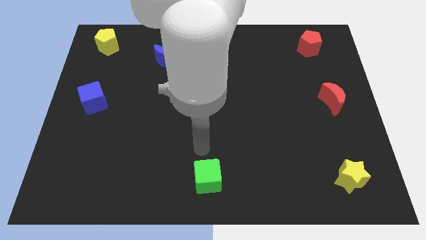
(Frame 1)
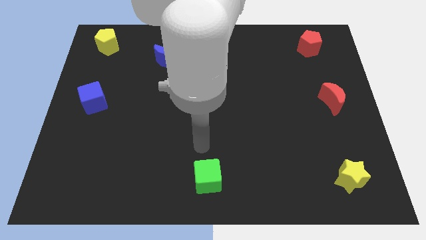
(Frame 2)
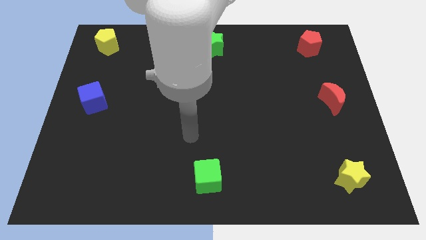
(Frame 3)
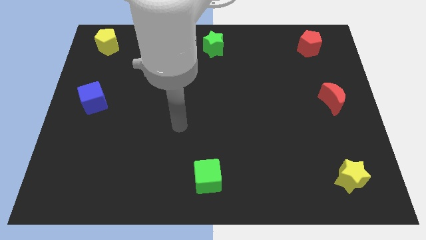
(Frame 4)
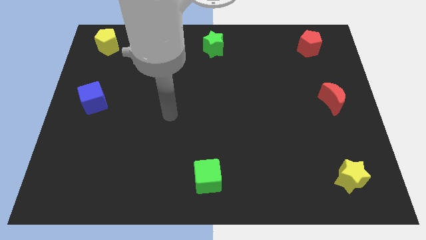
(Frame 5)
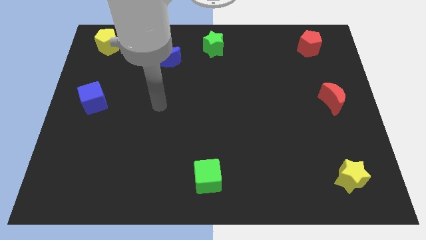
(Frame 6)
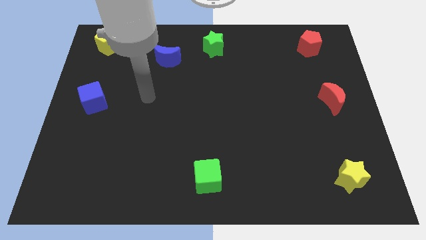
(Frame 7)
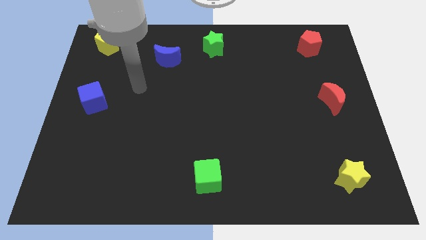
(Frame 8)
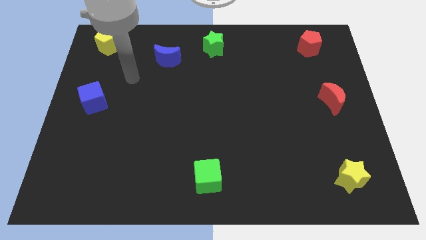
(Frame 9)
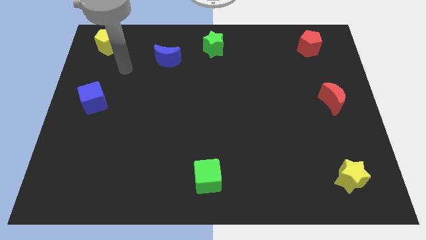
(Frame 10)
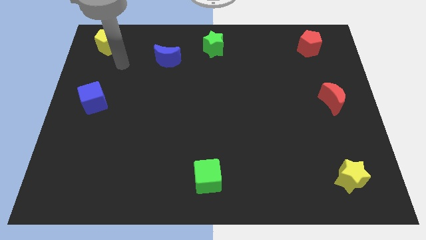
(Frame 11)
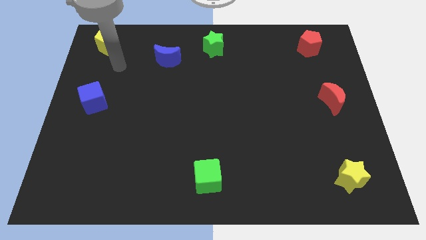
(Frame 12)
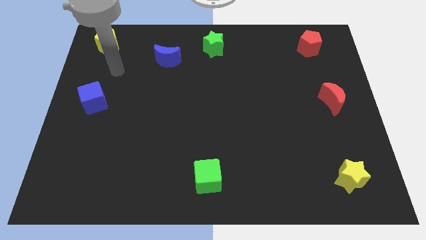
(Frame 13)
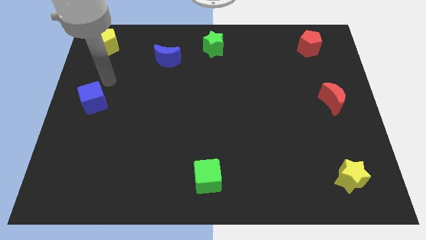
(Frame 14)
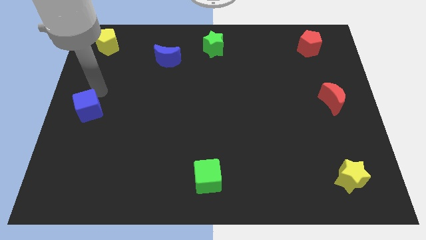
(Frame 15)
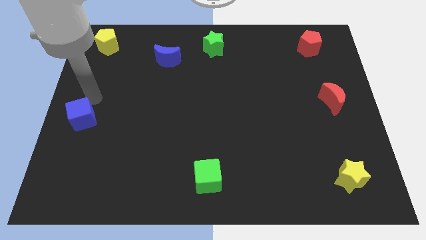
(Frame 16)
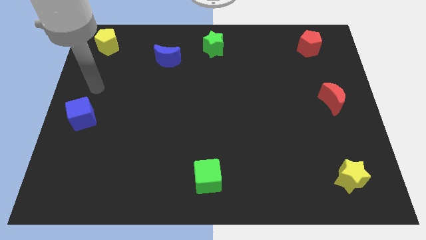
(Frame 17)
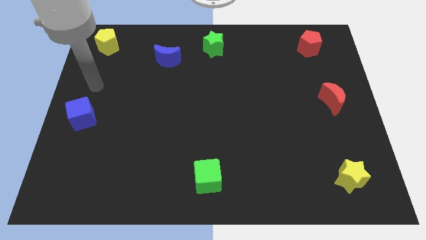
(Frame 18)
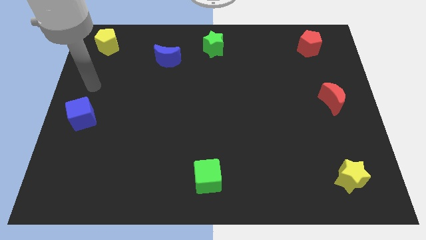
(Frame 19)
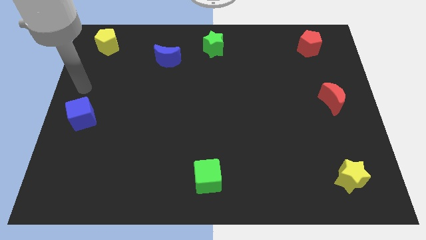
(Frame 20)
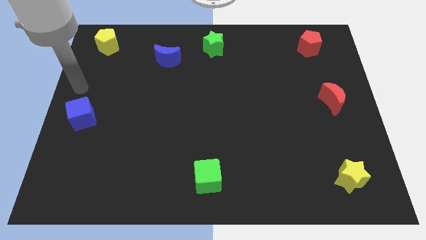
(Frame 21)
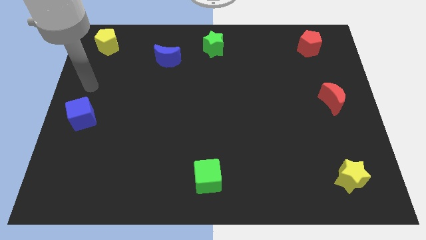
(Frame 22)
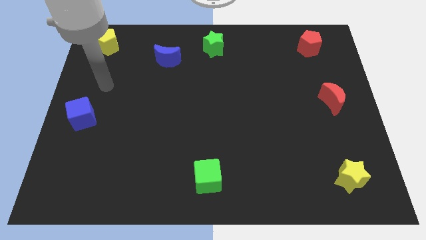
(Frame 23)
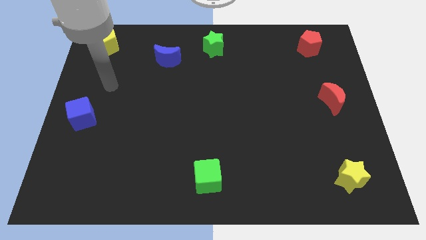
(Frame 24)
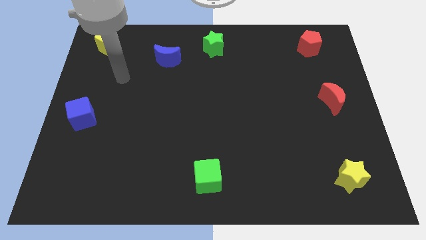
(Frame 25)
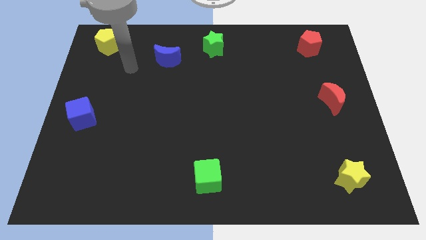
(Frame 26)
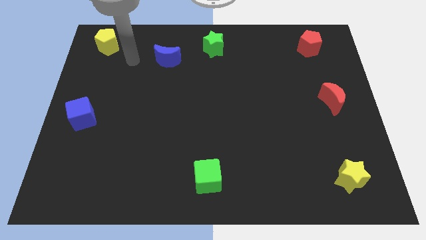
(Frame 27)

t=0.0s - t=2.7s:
slightly adjust the blue cube to the left center

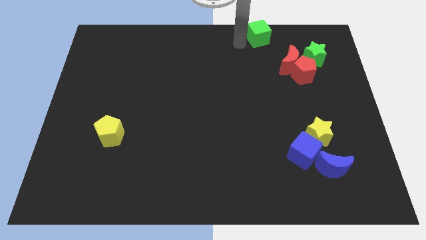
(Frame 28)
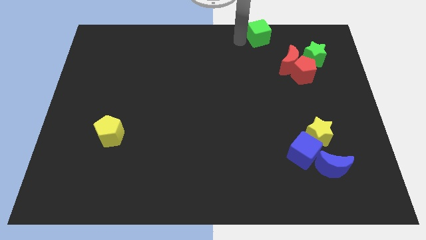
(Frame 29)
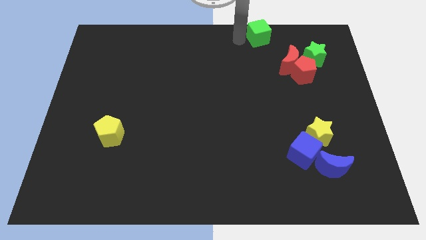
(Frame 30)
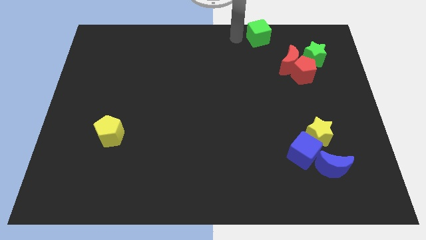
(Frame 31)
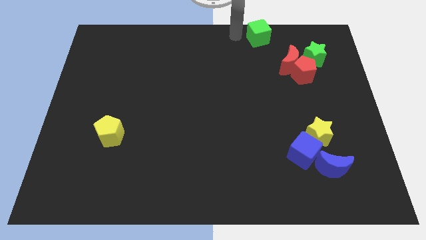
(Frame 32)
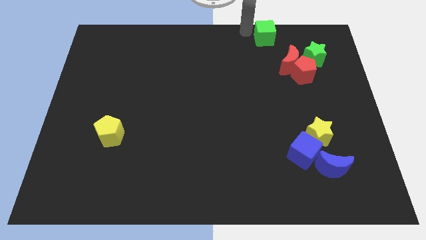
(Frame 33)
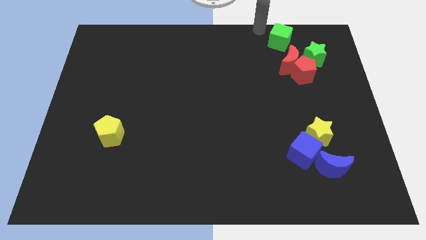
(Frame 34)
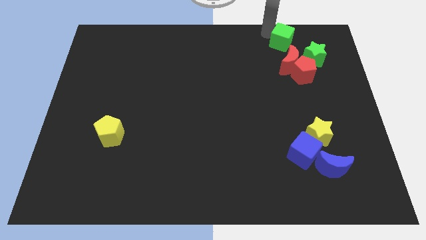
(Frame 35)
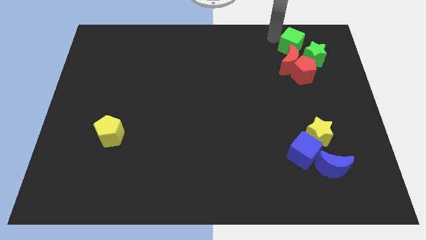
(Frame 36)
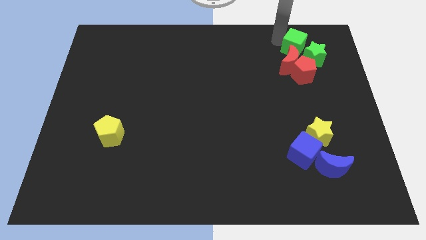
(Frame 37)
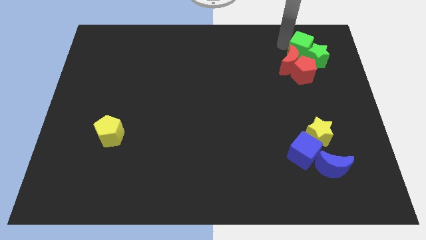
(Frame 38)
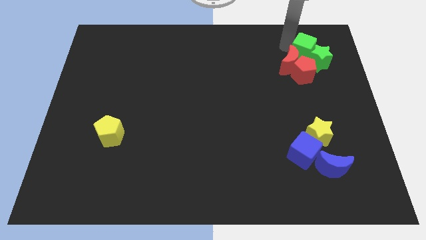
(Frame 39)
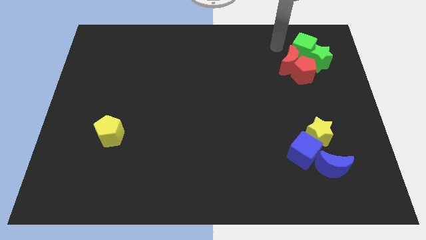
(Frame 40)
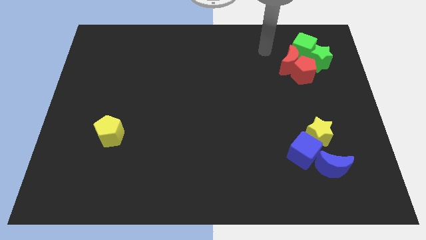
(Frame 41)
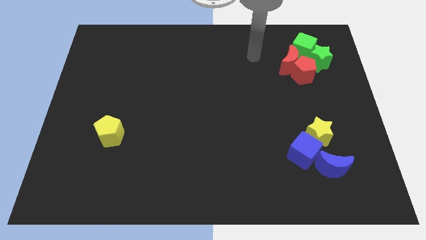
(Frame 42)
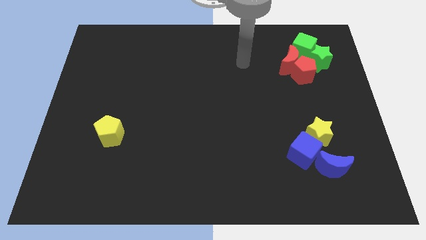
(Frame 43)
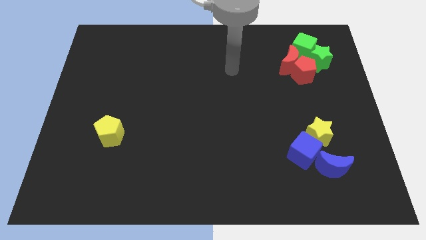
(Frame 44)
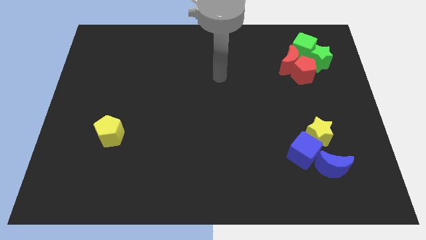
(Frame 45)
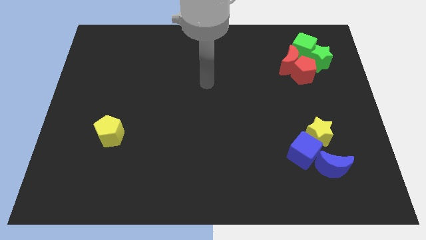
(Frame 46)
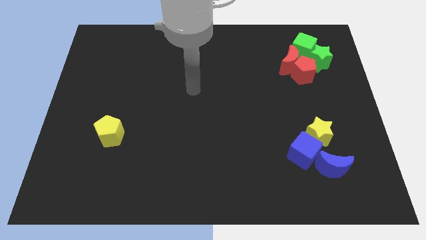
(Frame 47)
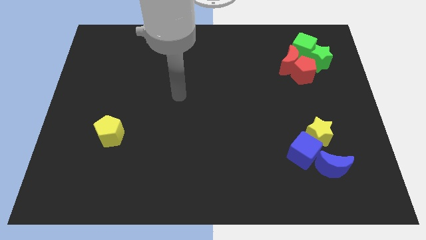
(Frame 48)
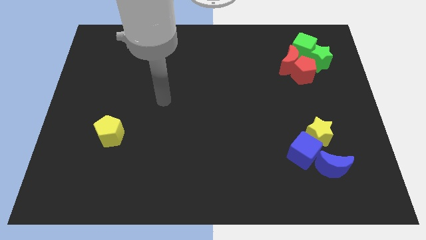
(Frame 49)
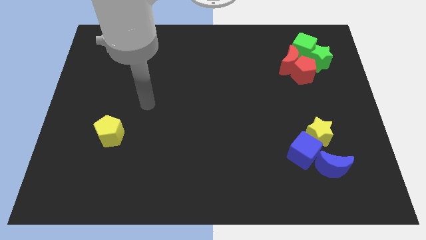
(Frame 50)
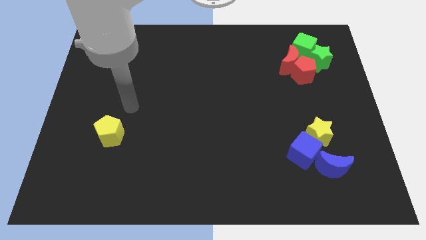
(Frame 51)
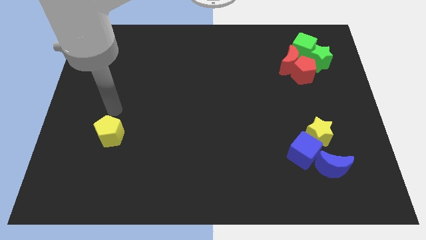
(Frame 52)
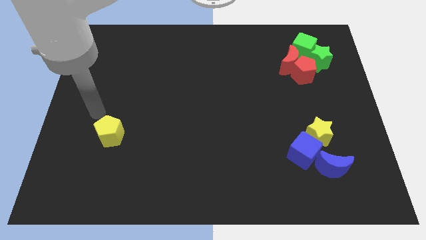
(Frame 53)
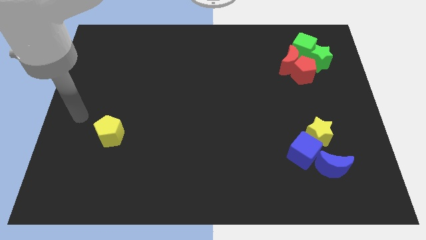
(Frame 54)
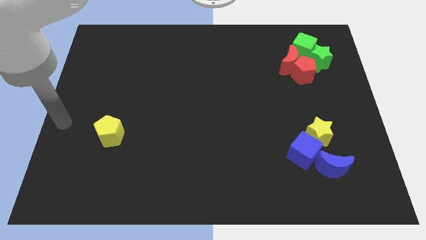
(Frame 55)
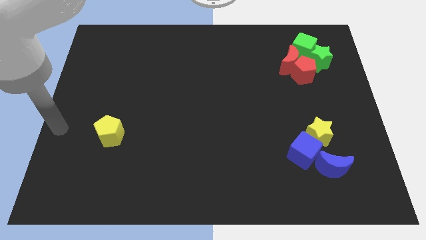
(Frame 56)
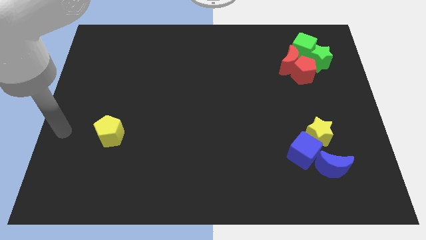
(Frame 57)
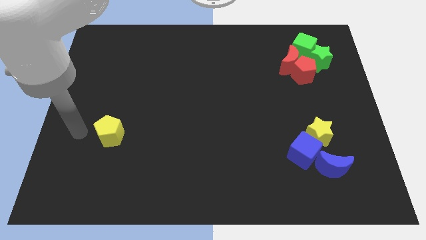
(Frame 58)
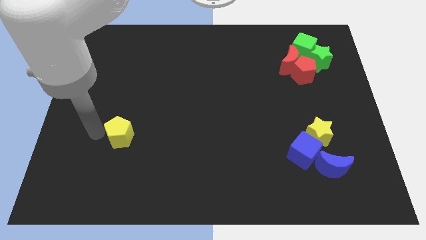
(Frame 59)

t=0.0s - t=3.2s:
move the green cube into the green star diagonally to the top left

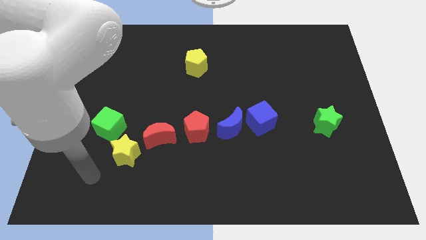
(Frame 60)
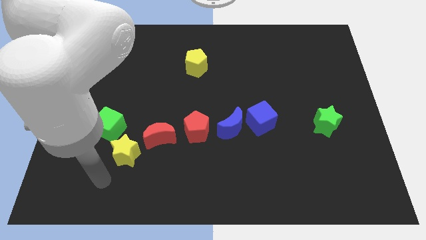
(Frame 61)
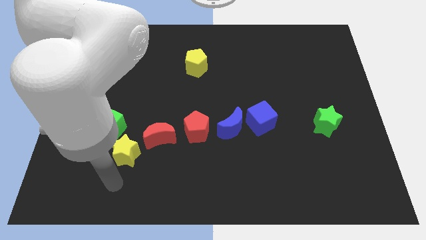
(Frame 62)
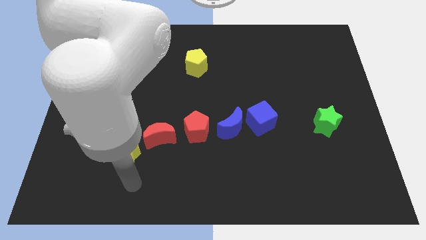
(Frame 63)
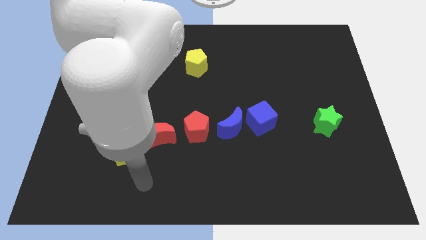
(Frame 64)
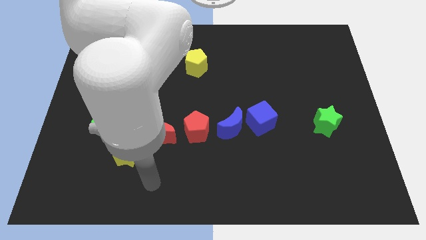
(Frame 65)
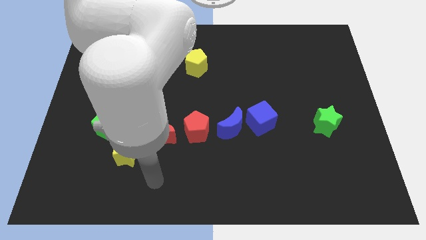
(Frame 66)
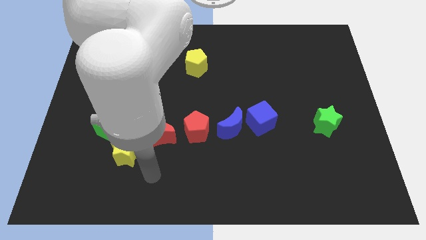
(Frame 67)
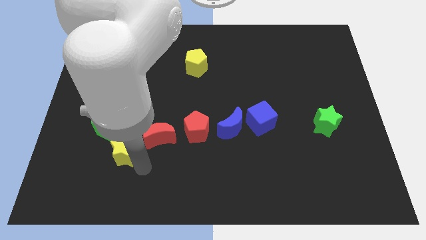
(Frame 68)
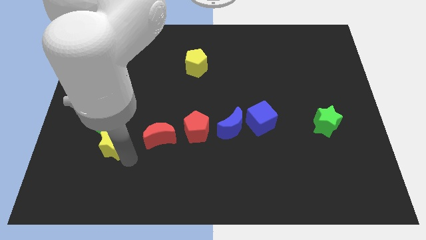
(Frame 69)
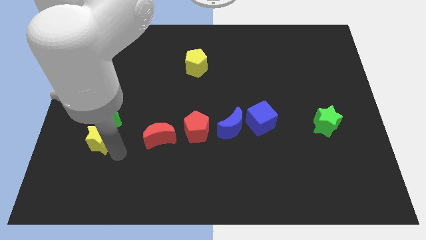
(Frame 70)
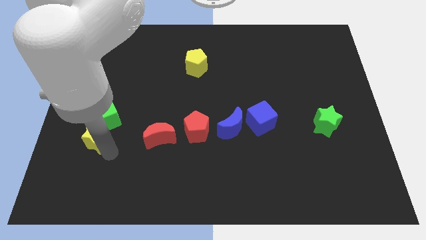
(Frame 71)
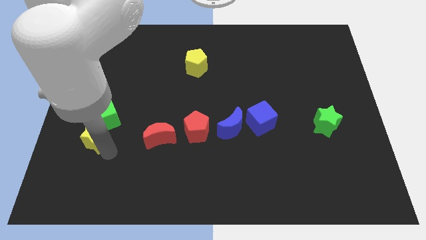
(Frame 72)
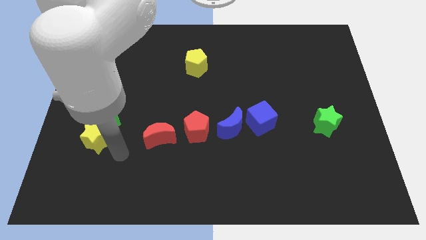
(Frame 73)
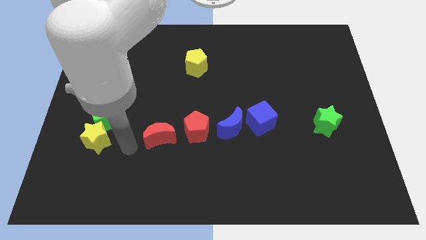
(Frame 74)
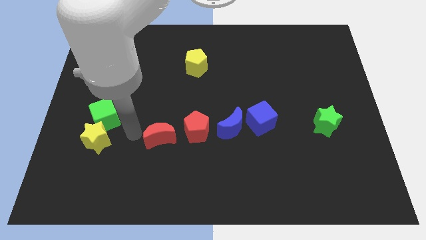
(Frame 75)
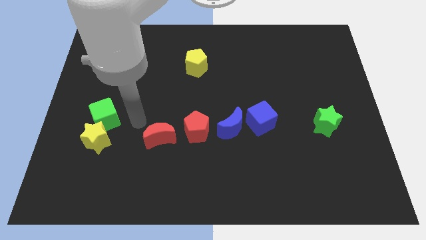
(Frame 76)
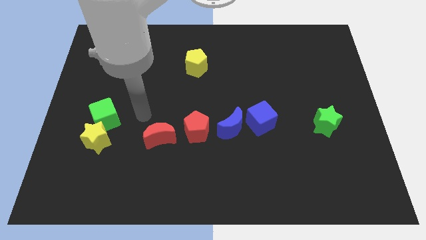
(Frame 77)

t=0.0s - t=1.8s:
push the yellow star below the green cube

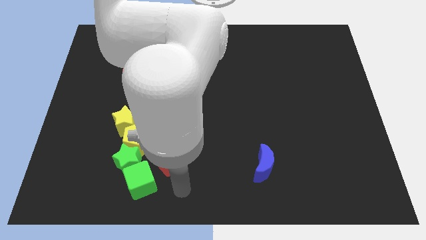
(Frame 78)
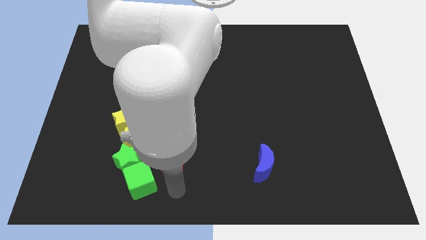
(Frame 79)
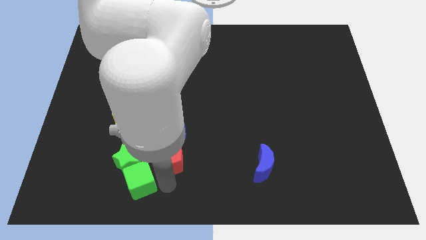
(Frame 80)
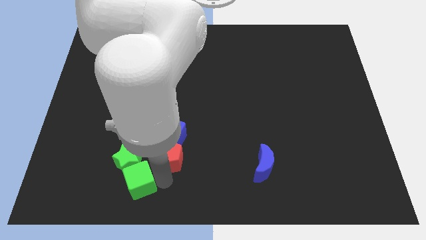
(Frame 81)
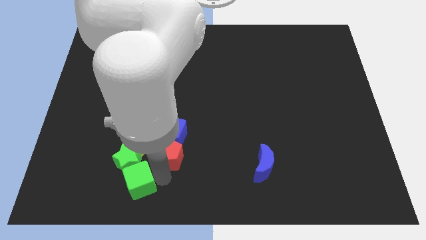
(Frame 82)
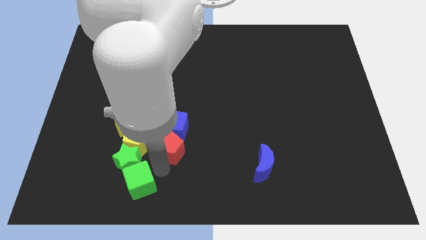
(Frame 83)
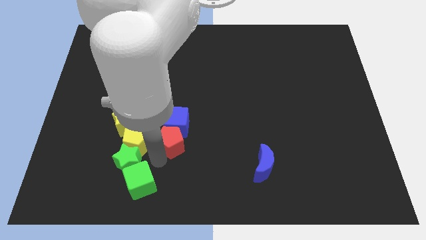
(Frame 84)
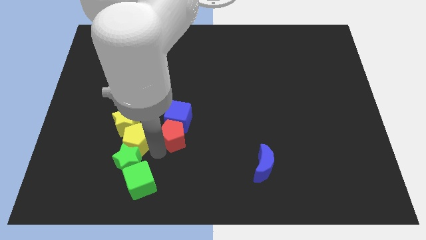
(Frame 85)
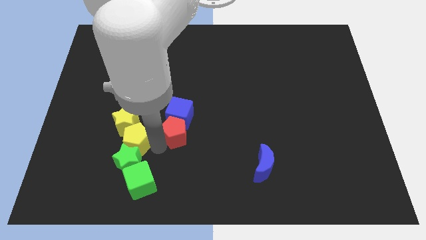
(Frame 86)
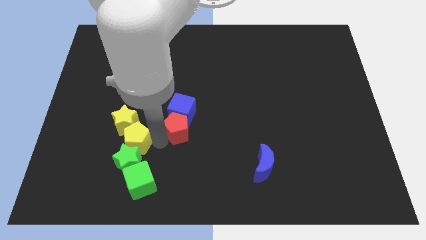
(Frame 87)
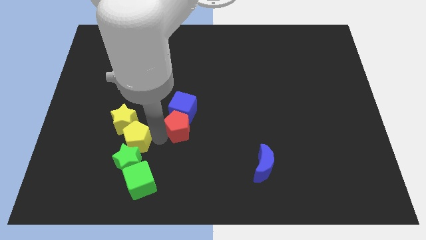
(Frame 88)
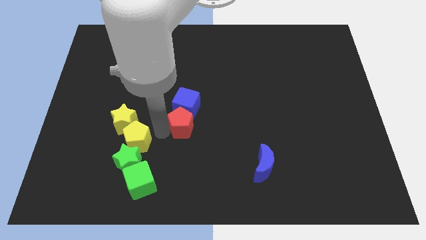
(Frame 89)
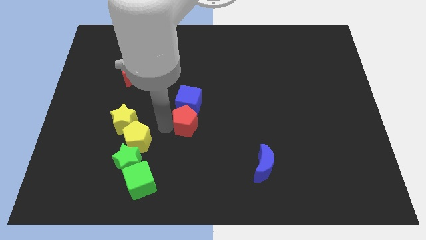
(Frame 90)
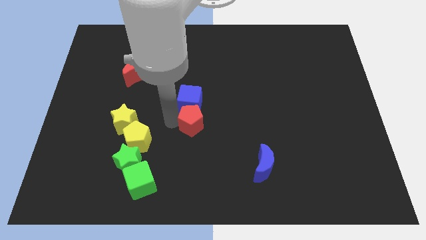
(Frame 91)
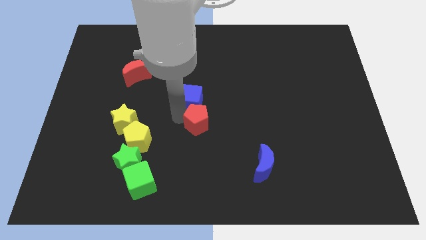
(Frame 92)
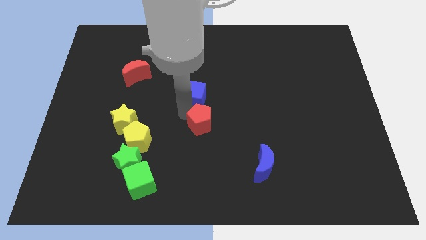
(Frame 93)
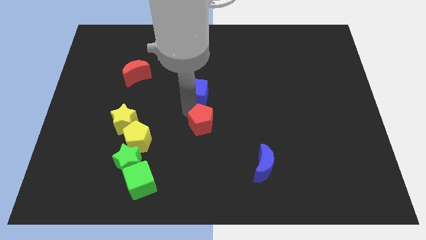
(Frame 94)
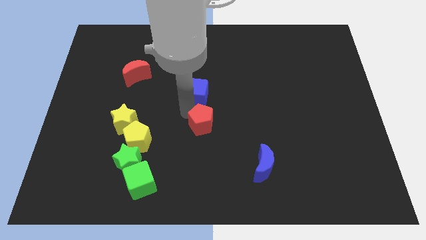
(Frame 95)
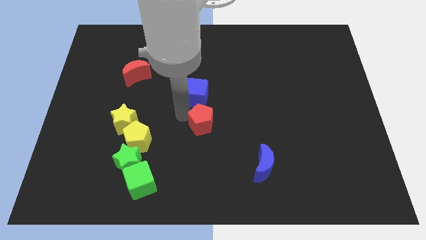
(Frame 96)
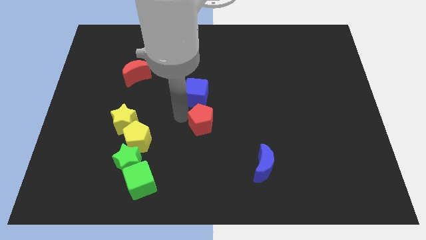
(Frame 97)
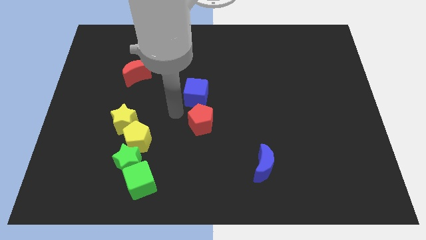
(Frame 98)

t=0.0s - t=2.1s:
move the blue cube upwards with the red pentagon
